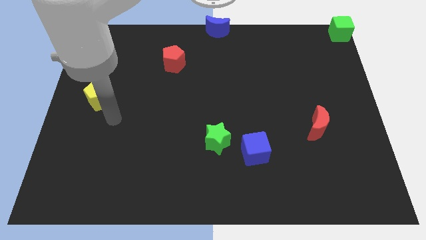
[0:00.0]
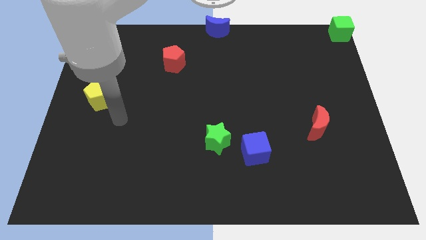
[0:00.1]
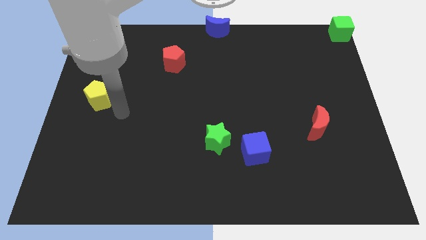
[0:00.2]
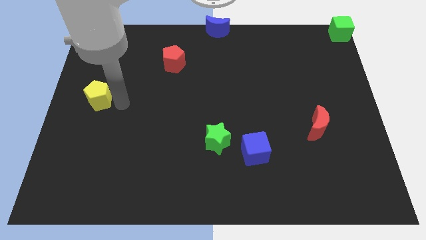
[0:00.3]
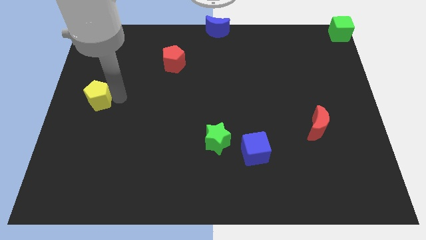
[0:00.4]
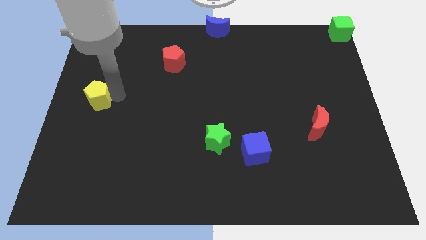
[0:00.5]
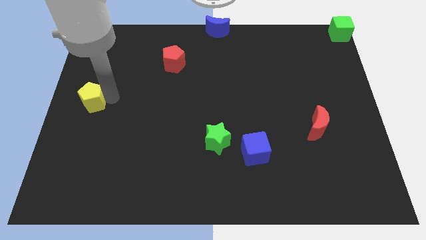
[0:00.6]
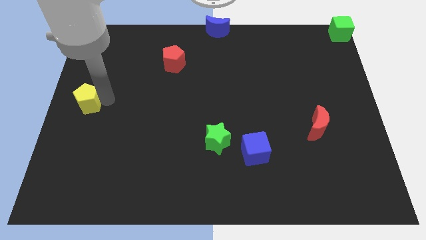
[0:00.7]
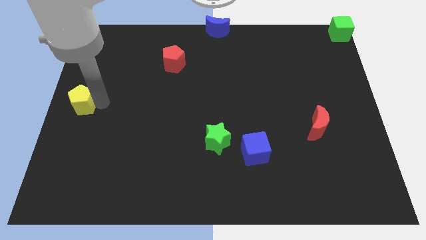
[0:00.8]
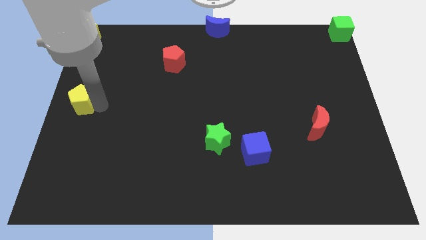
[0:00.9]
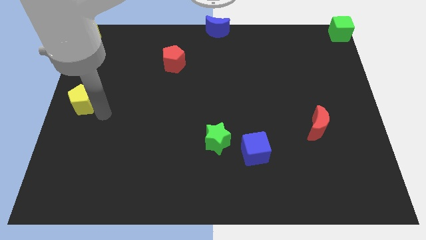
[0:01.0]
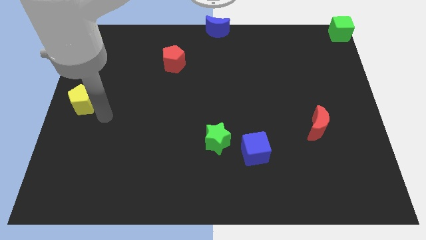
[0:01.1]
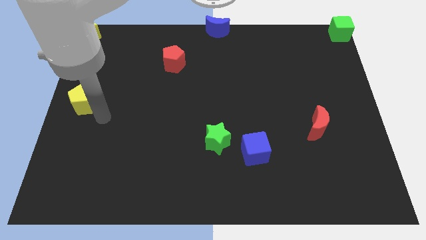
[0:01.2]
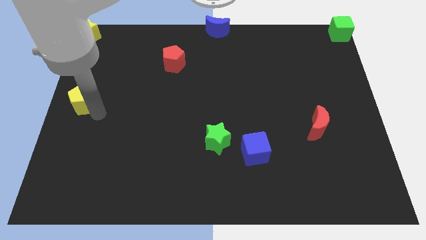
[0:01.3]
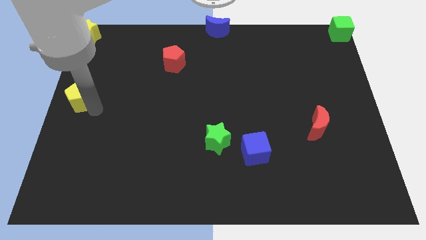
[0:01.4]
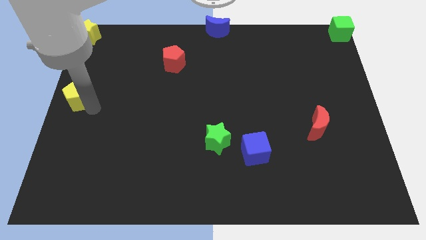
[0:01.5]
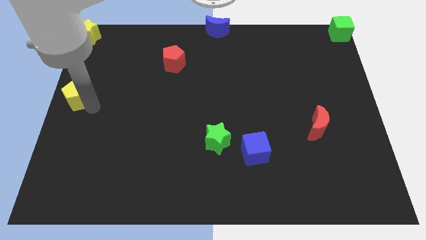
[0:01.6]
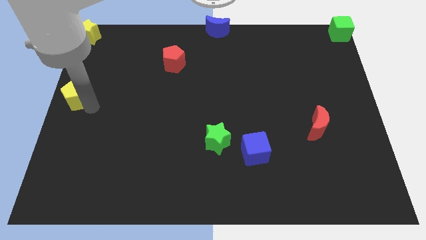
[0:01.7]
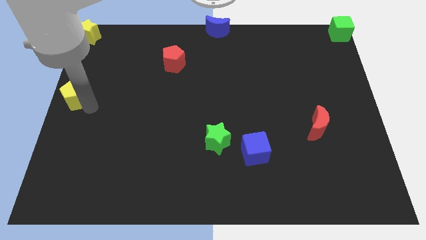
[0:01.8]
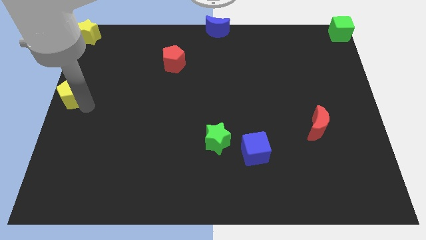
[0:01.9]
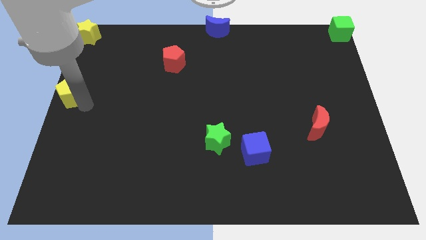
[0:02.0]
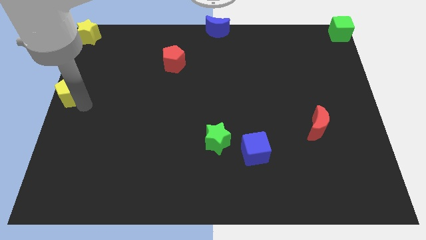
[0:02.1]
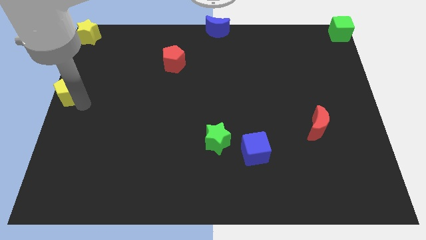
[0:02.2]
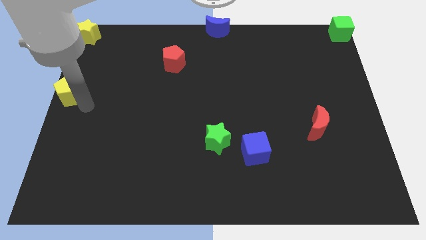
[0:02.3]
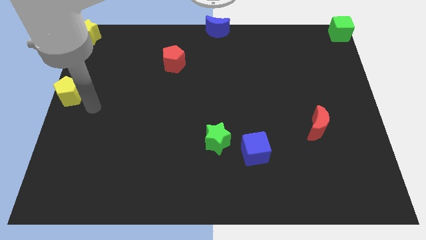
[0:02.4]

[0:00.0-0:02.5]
push the yellow pentagon to the center left

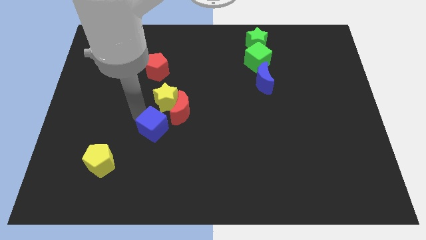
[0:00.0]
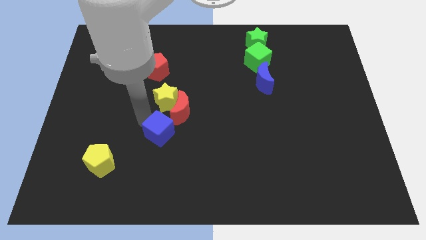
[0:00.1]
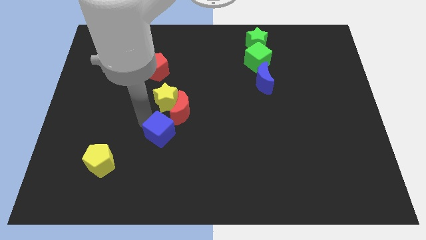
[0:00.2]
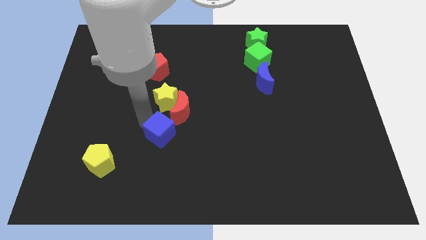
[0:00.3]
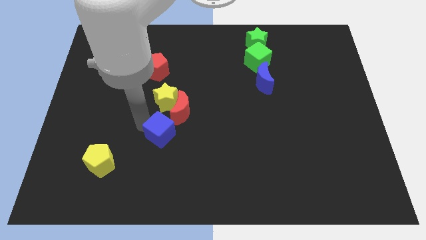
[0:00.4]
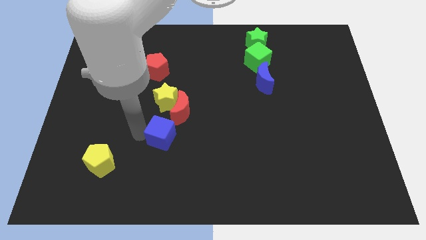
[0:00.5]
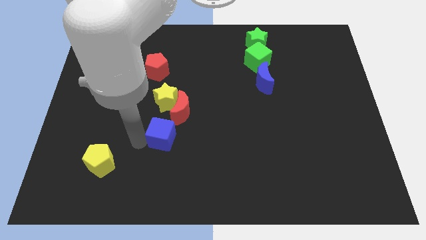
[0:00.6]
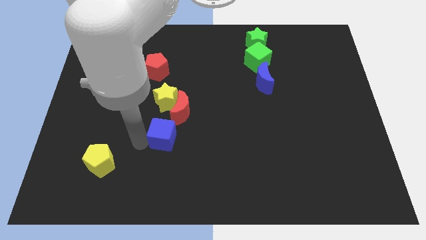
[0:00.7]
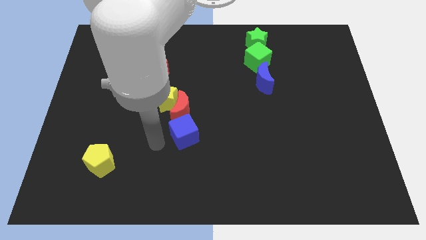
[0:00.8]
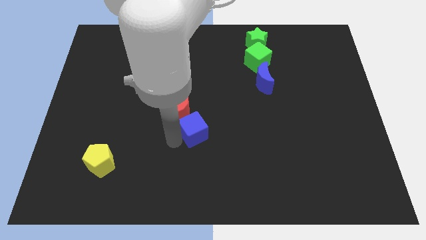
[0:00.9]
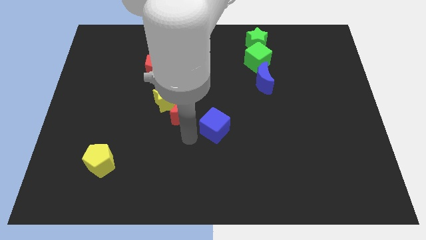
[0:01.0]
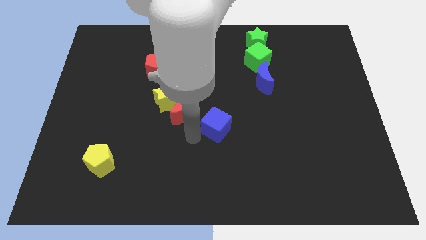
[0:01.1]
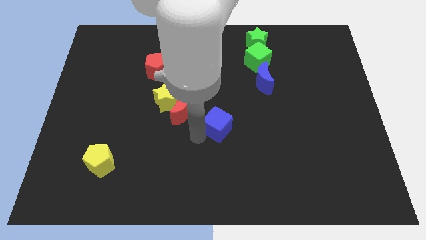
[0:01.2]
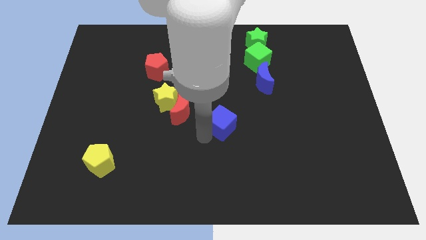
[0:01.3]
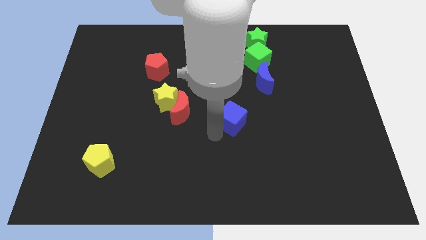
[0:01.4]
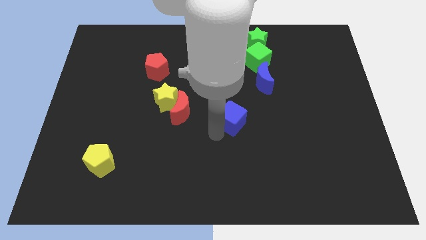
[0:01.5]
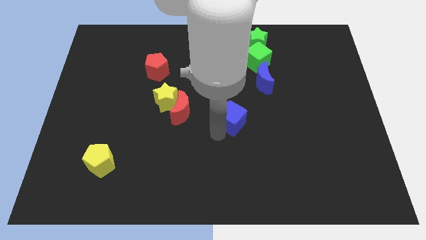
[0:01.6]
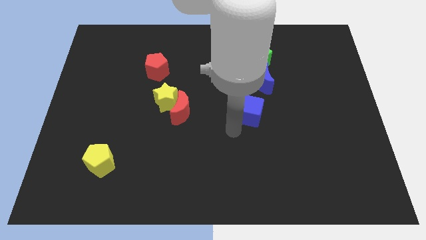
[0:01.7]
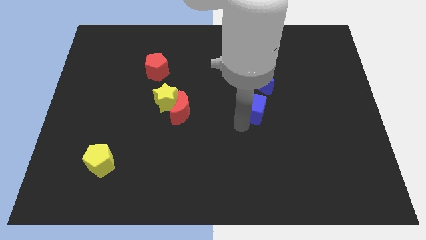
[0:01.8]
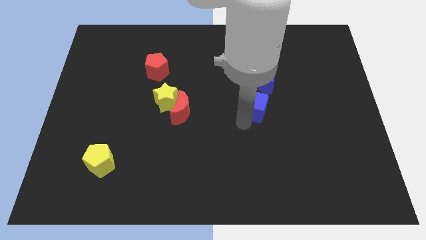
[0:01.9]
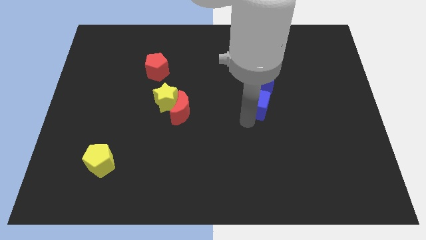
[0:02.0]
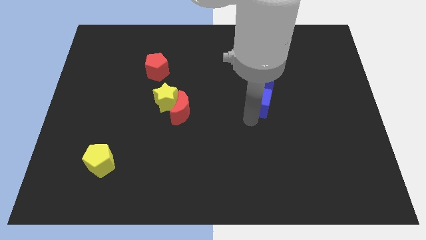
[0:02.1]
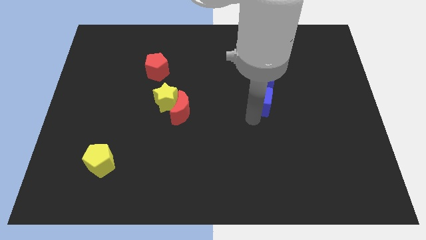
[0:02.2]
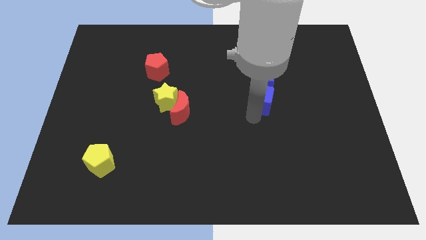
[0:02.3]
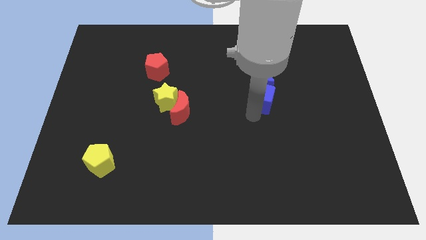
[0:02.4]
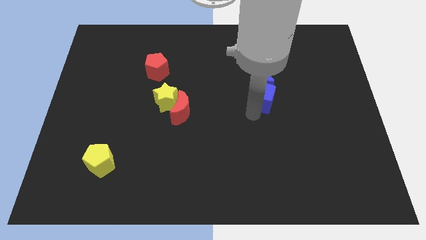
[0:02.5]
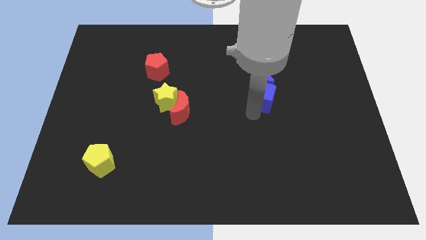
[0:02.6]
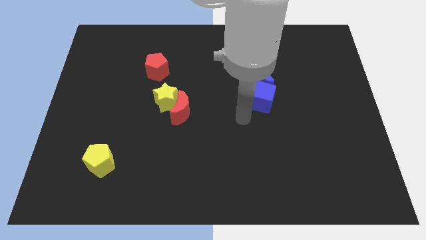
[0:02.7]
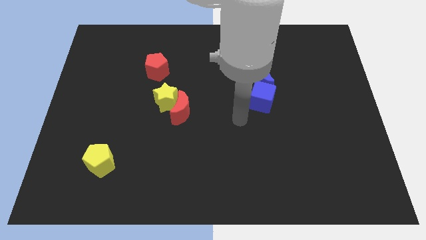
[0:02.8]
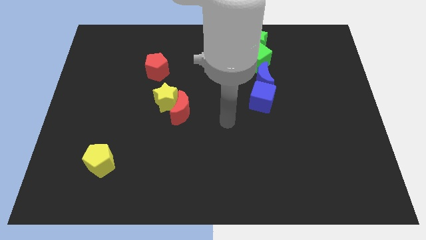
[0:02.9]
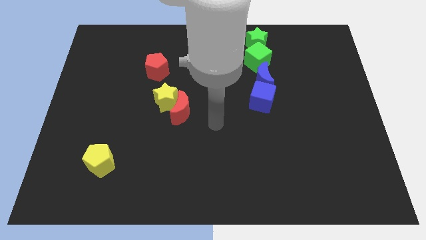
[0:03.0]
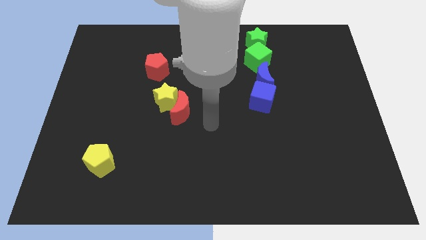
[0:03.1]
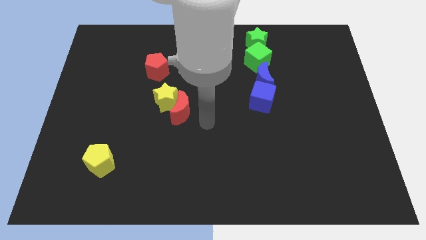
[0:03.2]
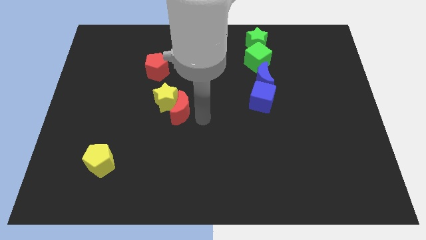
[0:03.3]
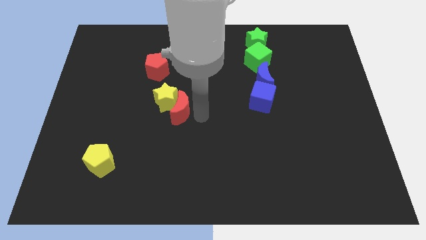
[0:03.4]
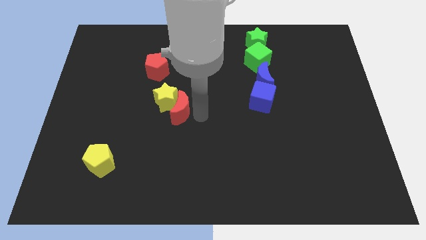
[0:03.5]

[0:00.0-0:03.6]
push the blue cube below the blue crescent

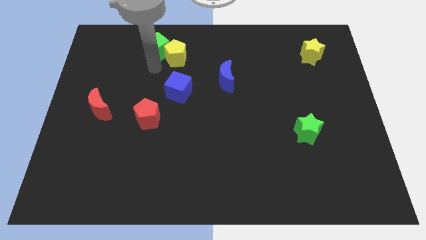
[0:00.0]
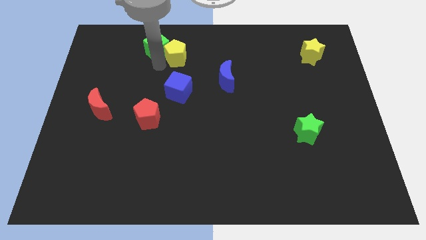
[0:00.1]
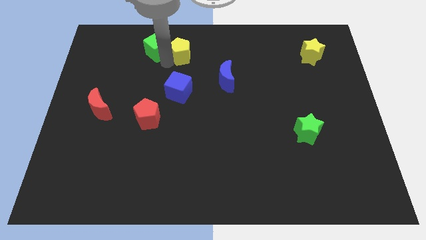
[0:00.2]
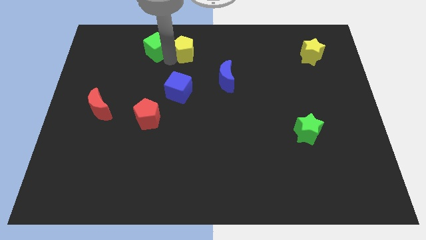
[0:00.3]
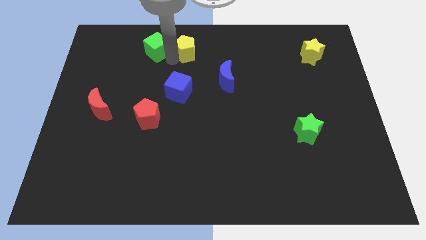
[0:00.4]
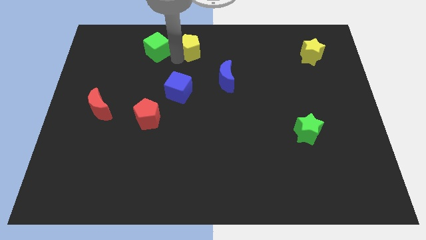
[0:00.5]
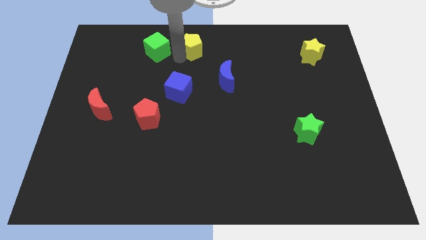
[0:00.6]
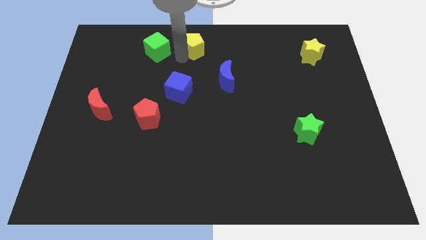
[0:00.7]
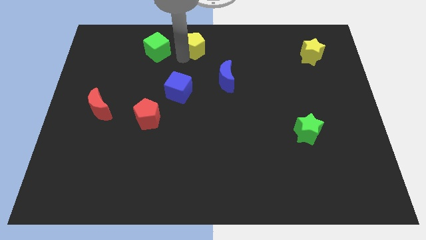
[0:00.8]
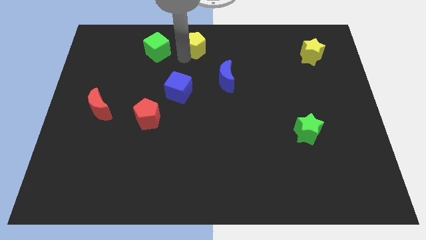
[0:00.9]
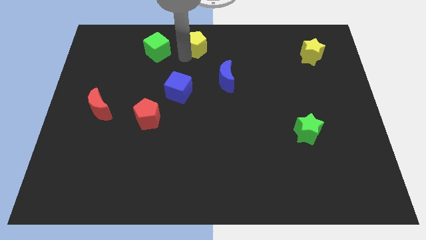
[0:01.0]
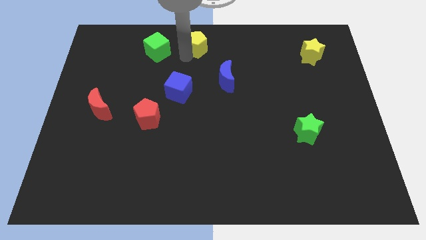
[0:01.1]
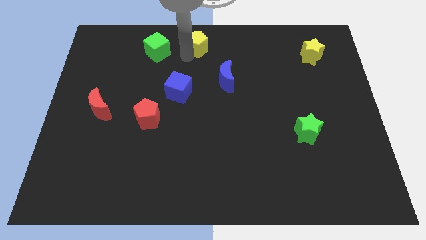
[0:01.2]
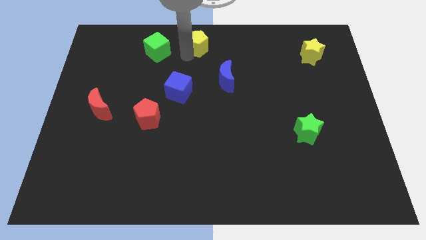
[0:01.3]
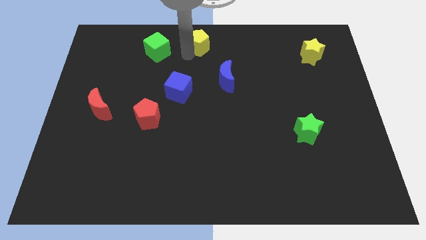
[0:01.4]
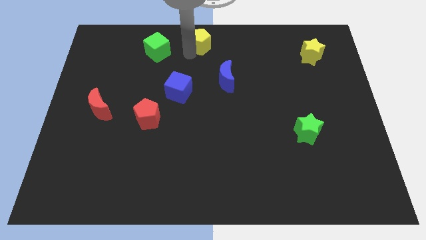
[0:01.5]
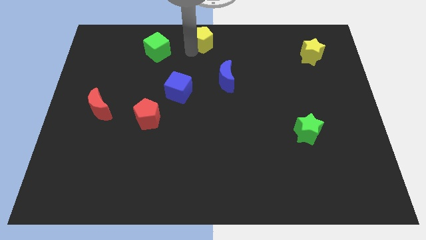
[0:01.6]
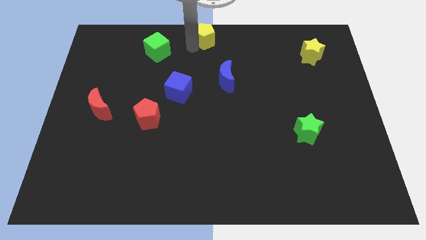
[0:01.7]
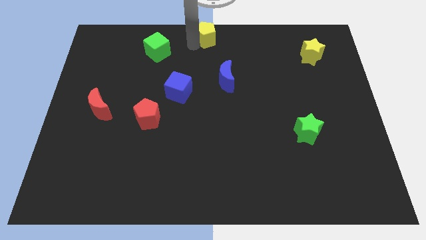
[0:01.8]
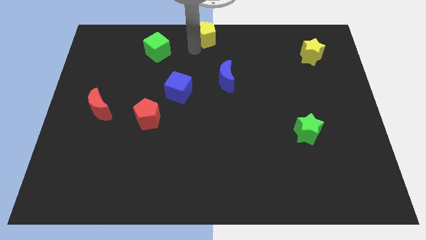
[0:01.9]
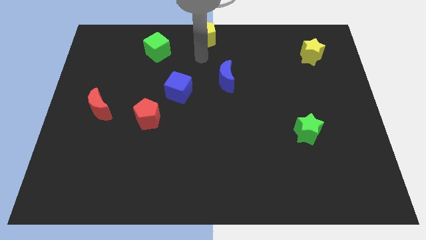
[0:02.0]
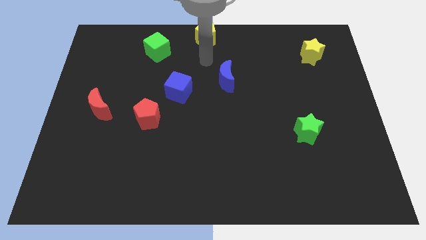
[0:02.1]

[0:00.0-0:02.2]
place the yellow pentagon at the top of the blue cube

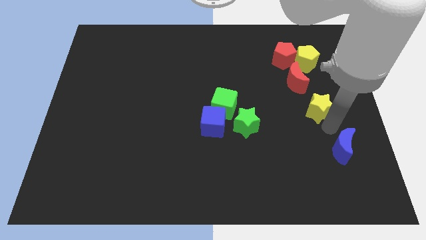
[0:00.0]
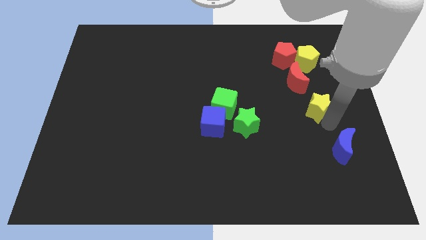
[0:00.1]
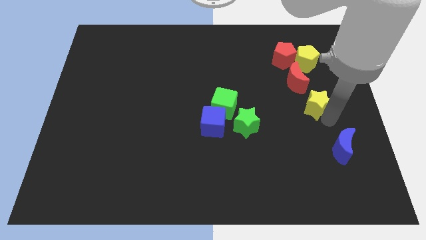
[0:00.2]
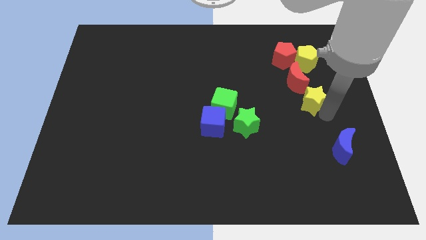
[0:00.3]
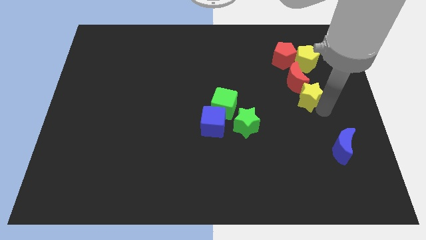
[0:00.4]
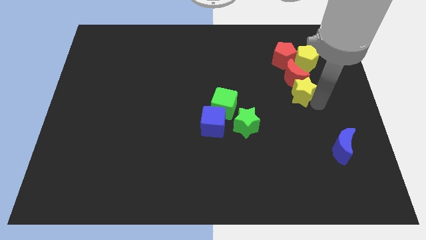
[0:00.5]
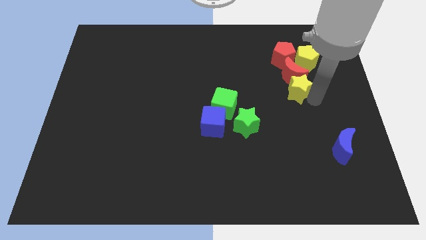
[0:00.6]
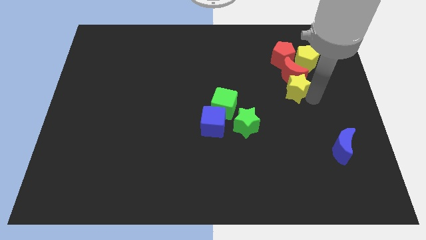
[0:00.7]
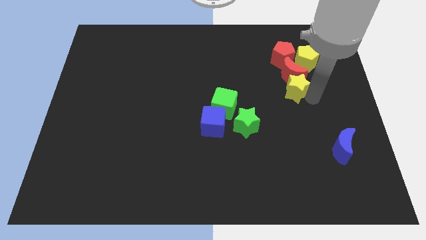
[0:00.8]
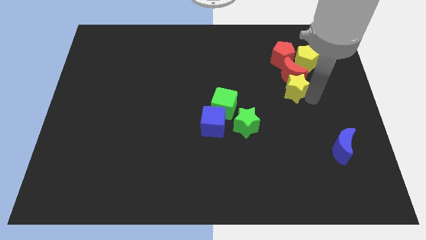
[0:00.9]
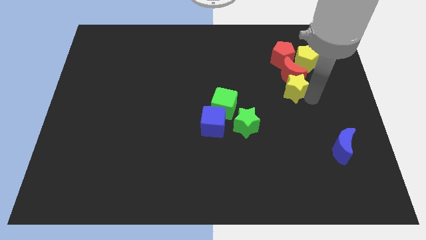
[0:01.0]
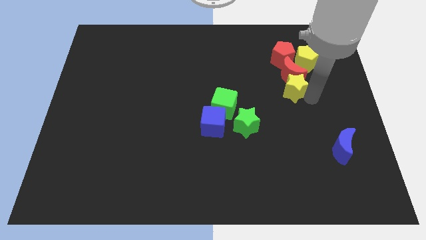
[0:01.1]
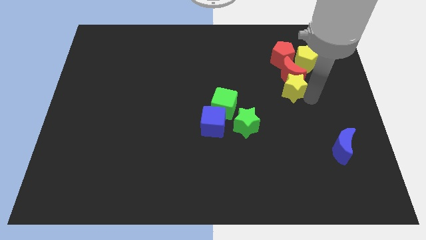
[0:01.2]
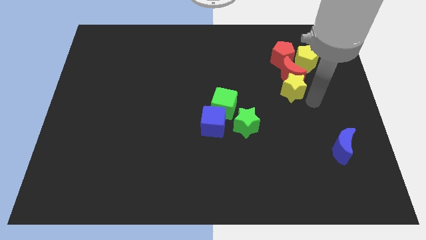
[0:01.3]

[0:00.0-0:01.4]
push yellow star towards red moon
